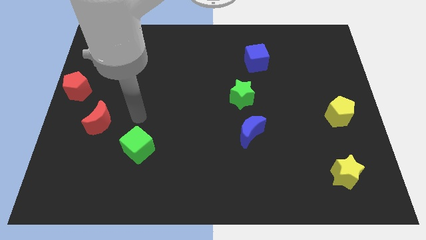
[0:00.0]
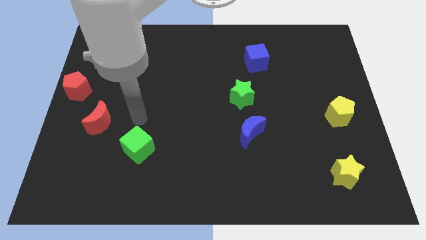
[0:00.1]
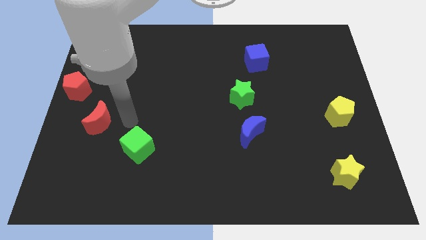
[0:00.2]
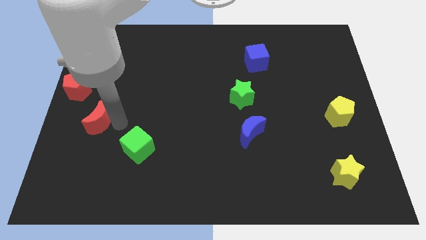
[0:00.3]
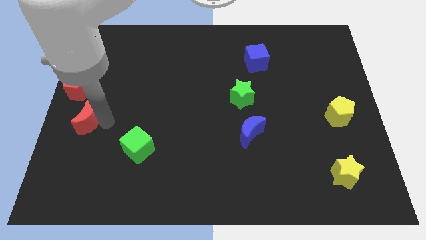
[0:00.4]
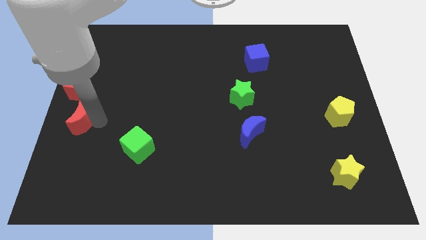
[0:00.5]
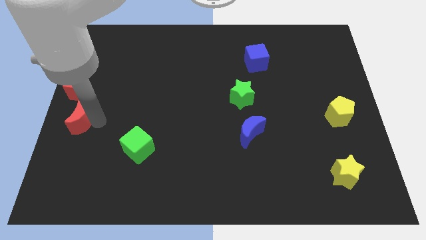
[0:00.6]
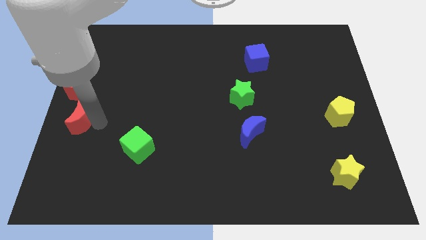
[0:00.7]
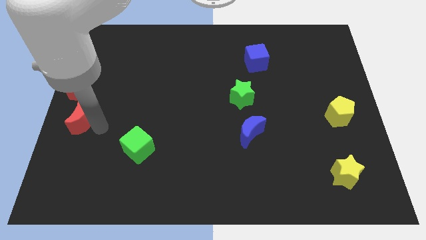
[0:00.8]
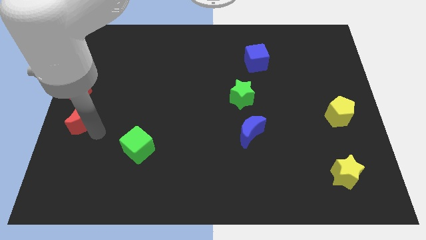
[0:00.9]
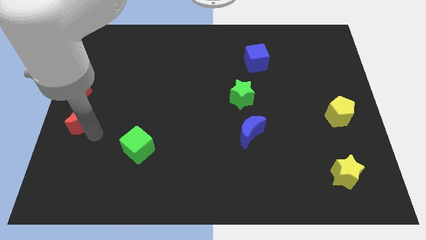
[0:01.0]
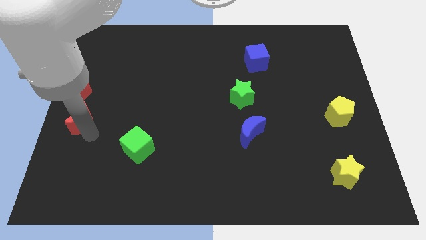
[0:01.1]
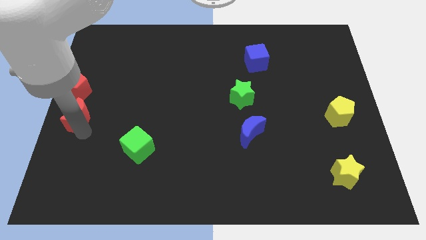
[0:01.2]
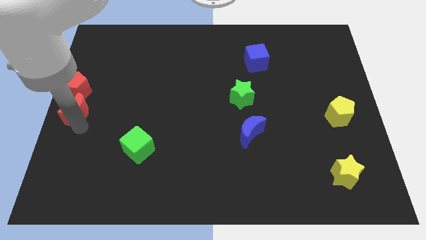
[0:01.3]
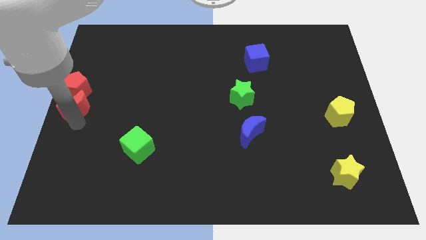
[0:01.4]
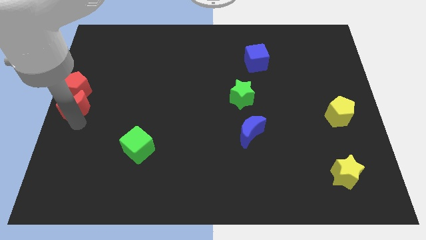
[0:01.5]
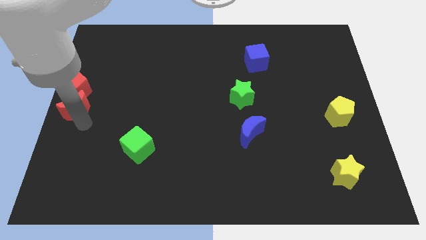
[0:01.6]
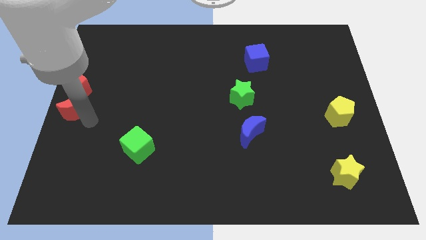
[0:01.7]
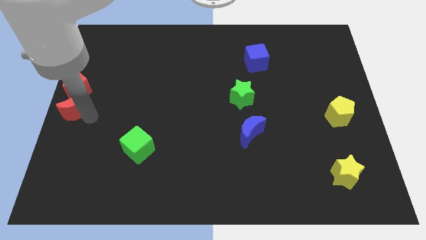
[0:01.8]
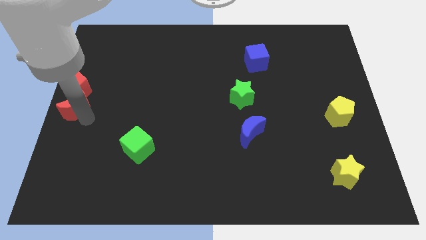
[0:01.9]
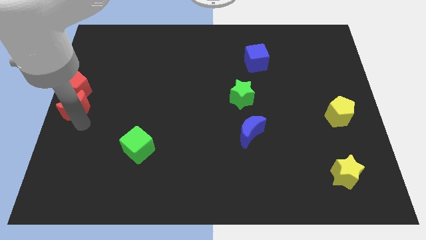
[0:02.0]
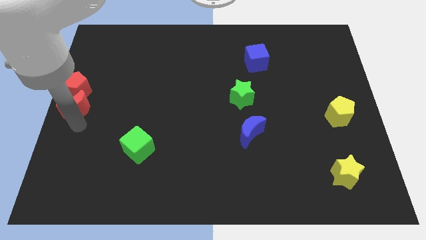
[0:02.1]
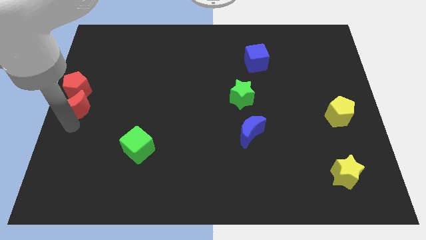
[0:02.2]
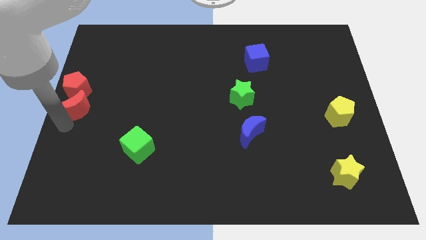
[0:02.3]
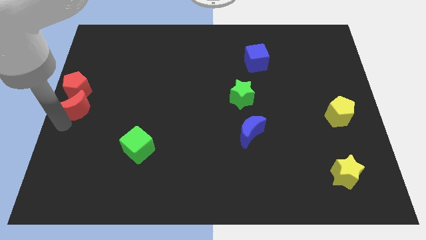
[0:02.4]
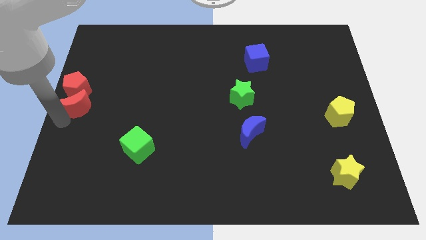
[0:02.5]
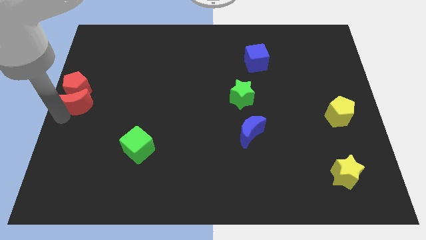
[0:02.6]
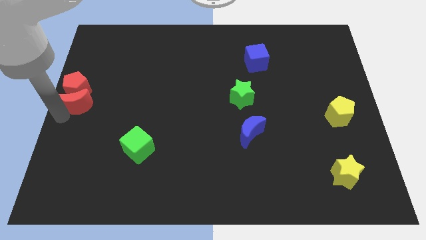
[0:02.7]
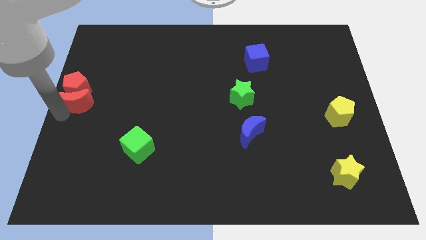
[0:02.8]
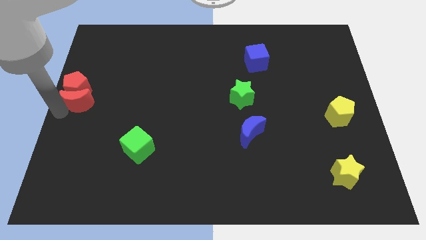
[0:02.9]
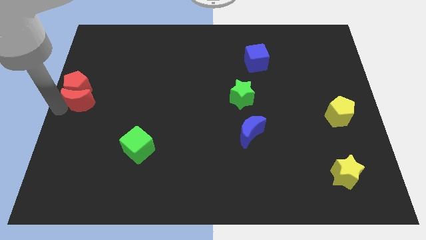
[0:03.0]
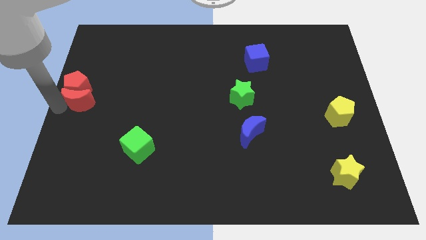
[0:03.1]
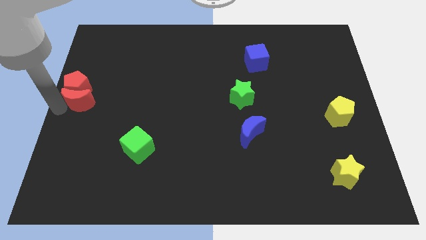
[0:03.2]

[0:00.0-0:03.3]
move the red crescent into the bottom side of the red pentagon

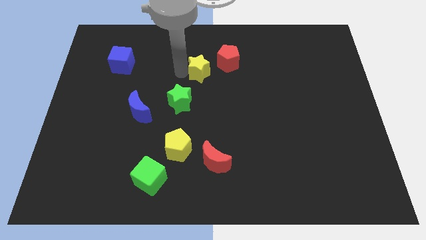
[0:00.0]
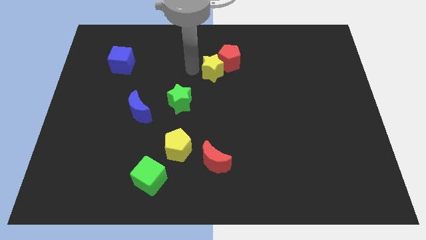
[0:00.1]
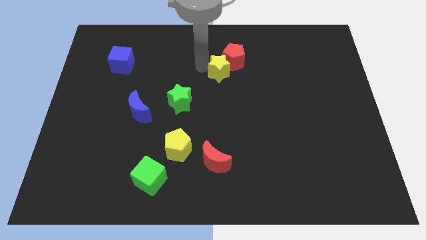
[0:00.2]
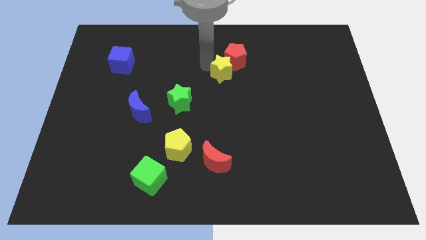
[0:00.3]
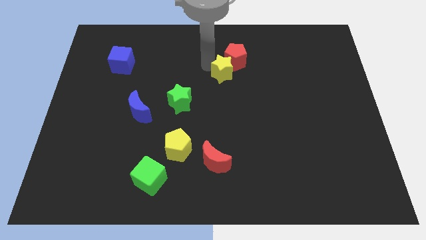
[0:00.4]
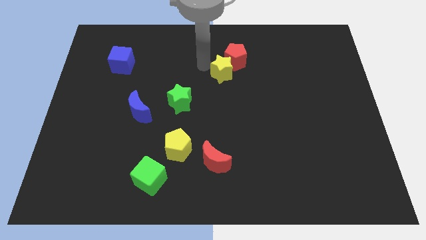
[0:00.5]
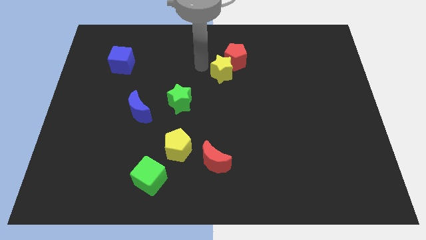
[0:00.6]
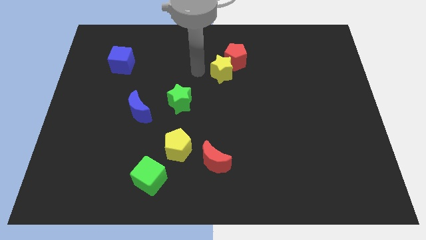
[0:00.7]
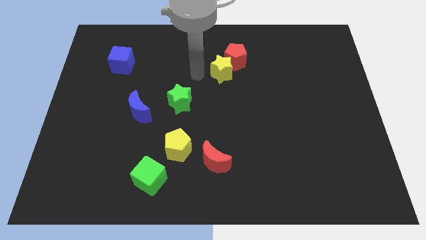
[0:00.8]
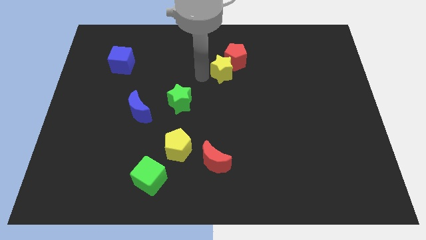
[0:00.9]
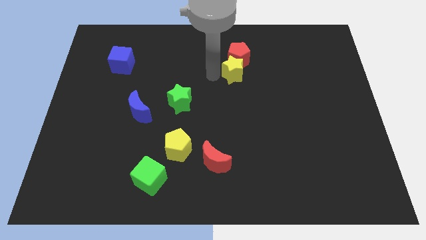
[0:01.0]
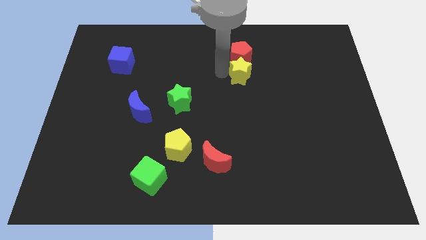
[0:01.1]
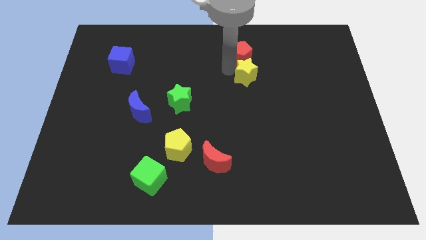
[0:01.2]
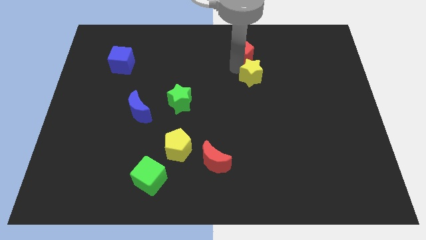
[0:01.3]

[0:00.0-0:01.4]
push the yellow star to the bottom of the red pentagon

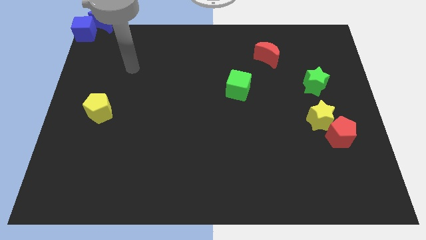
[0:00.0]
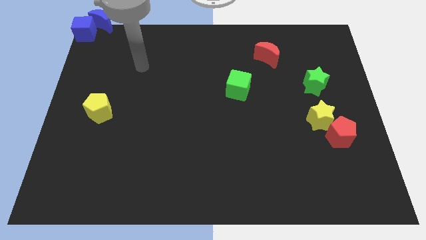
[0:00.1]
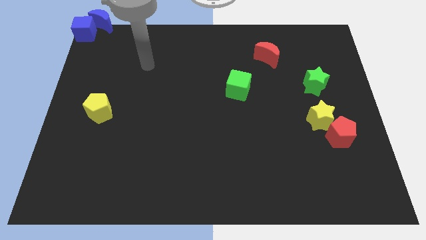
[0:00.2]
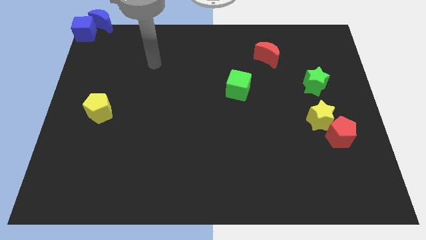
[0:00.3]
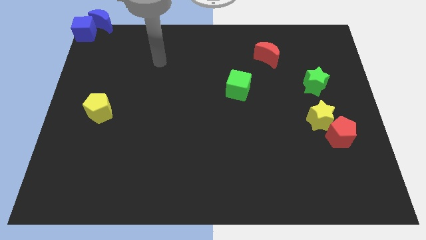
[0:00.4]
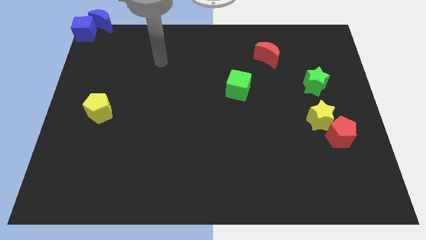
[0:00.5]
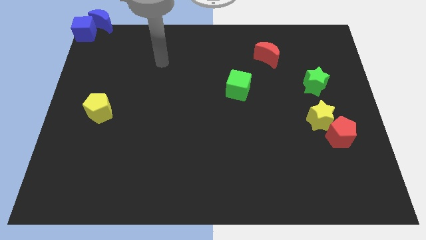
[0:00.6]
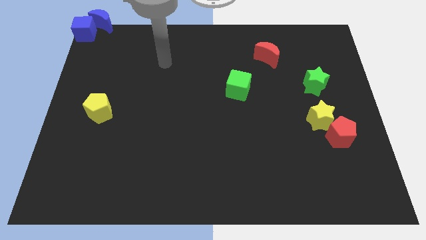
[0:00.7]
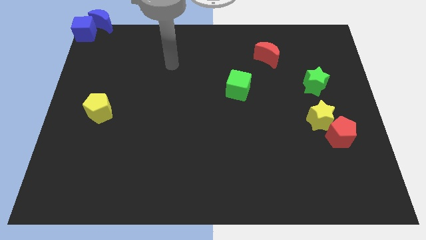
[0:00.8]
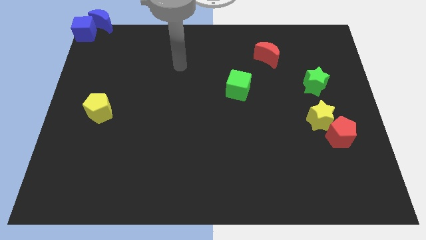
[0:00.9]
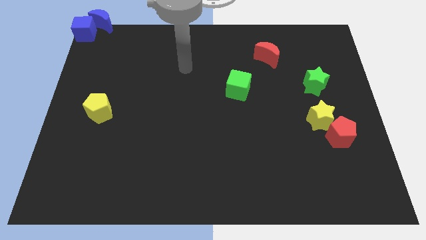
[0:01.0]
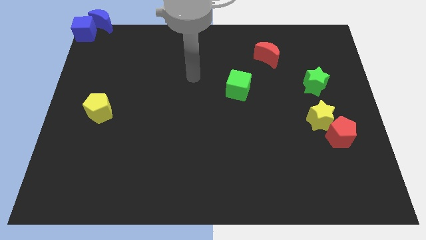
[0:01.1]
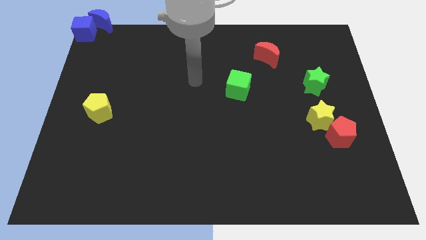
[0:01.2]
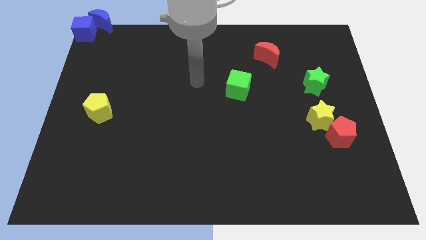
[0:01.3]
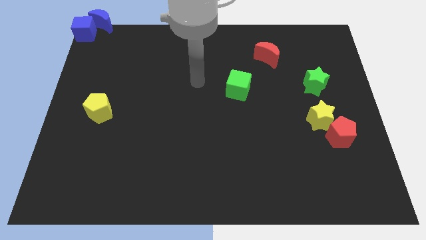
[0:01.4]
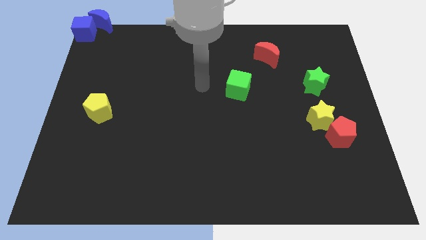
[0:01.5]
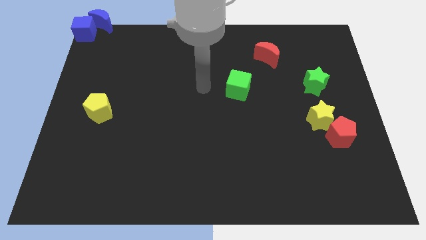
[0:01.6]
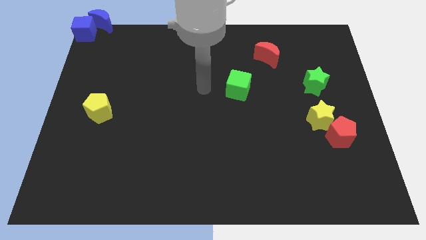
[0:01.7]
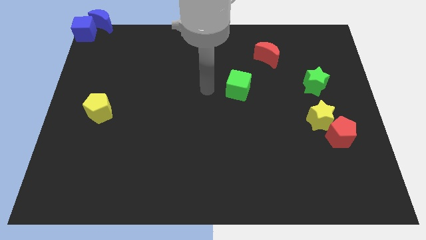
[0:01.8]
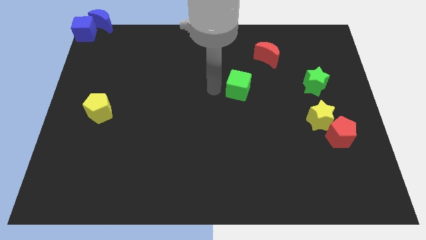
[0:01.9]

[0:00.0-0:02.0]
move your hand towards the left of green cube

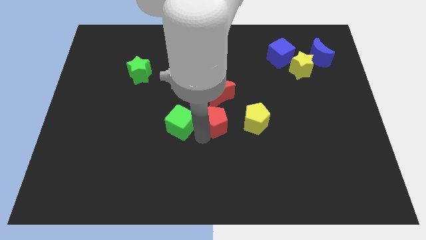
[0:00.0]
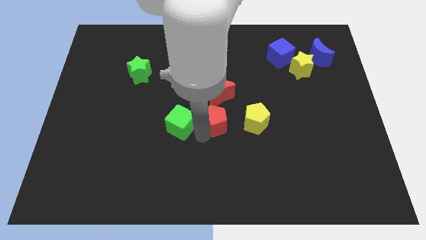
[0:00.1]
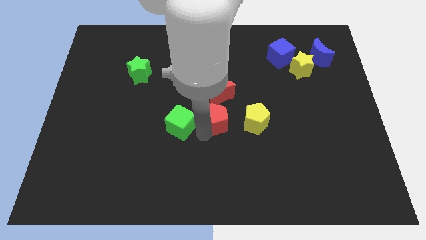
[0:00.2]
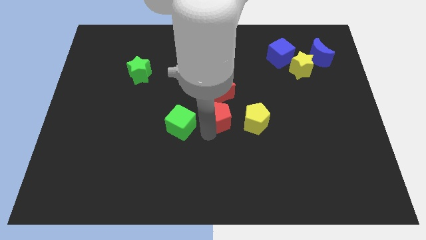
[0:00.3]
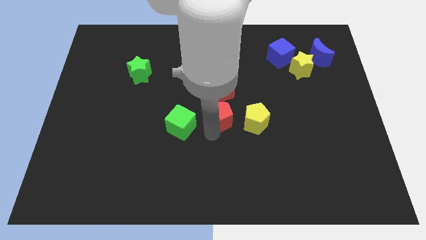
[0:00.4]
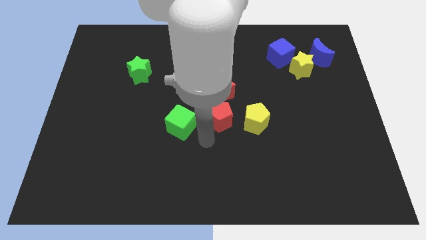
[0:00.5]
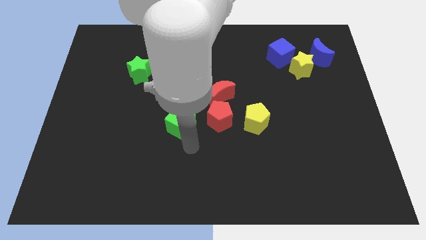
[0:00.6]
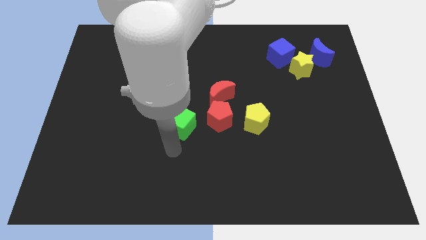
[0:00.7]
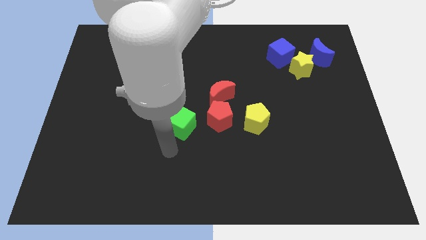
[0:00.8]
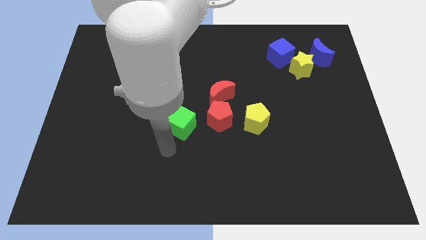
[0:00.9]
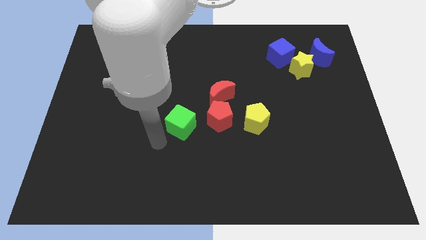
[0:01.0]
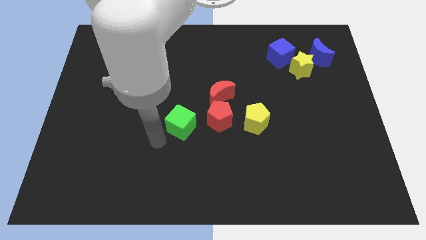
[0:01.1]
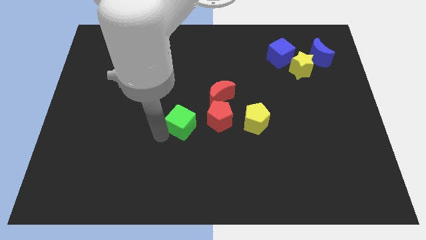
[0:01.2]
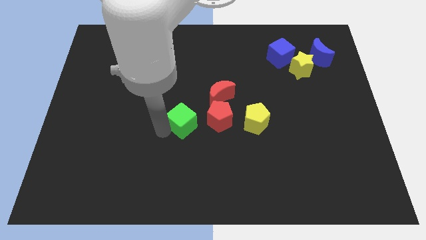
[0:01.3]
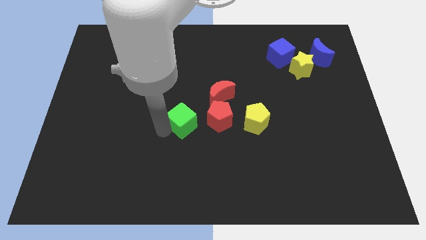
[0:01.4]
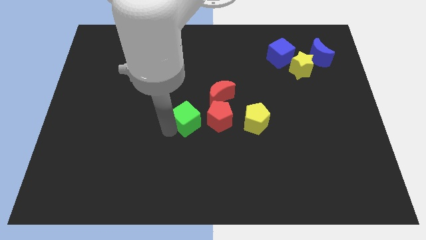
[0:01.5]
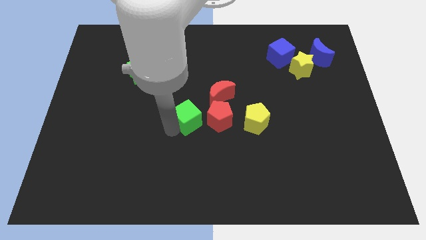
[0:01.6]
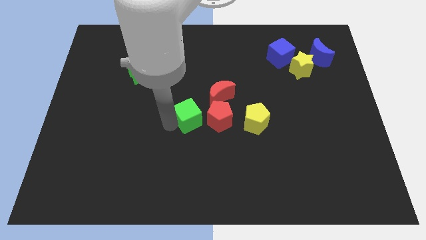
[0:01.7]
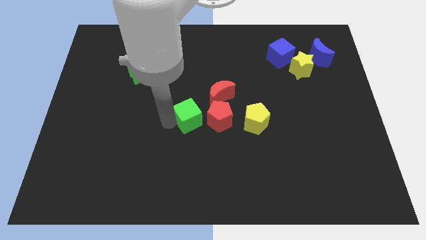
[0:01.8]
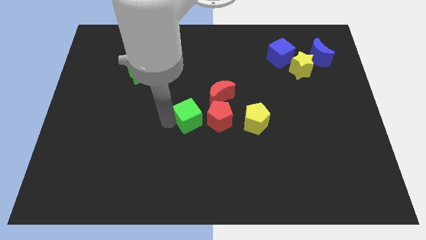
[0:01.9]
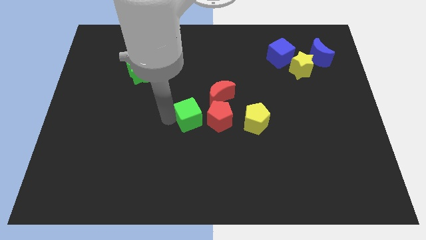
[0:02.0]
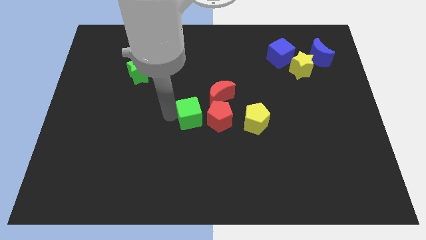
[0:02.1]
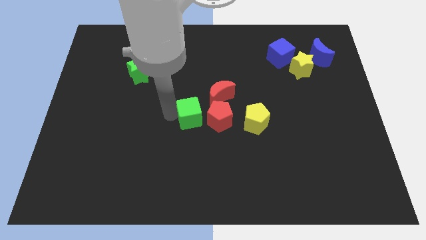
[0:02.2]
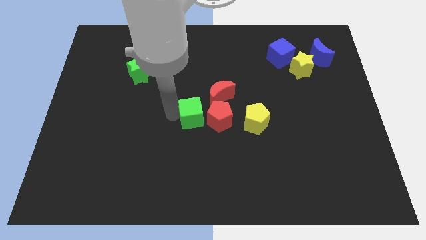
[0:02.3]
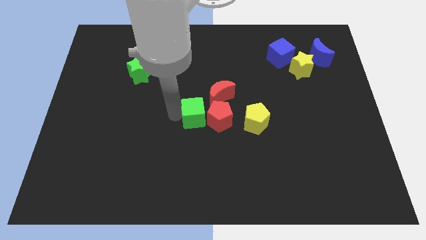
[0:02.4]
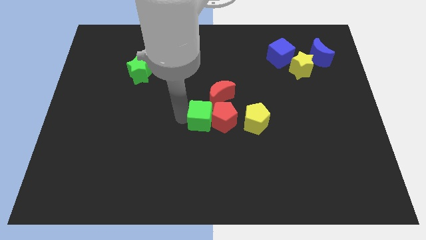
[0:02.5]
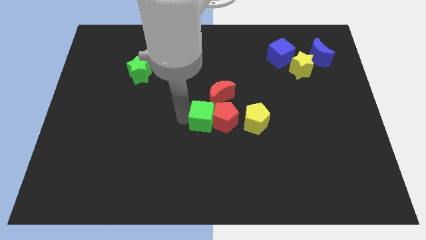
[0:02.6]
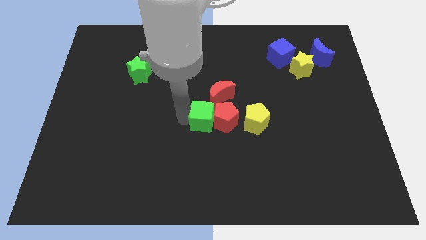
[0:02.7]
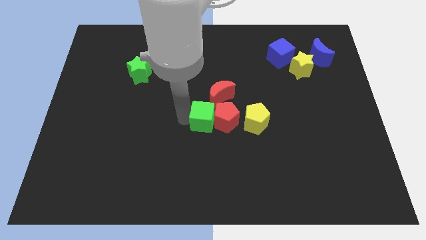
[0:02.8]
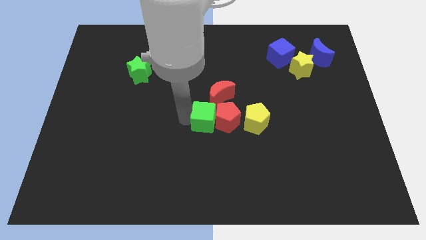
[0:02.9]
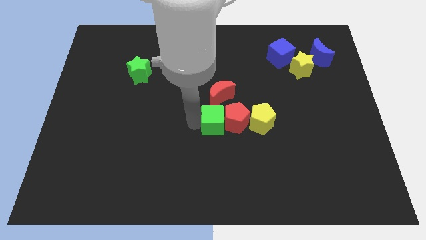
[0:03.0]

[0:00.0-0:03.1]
slide the green cube to the left of the red pentagon
